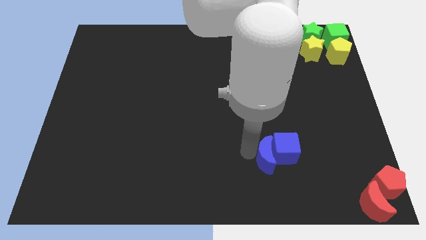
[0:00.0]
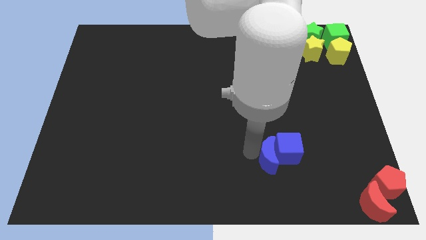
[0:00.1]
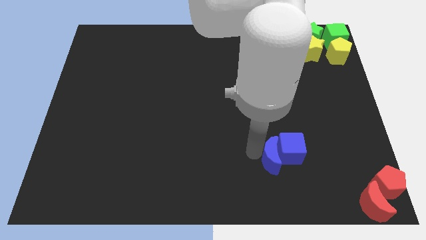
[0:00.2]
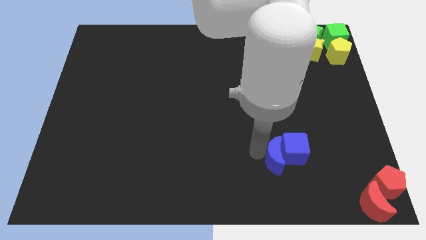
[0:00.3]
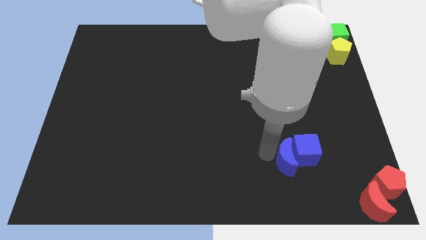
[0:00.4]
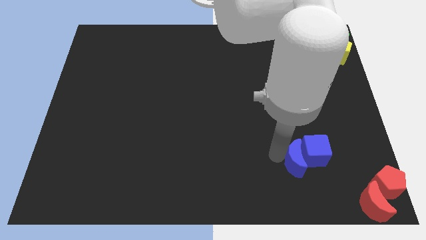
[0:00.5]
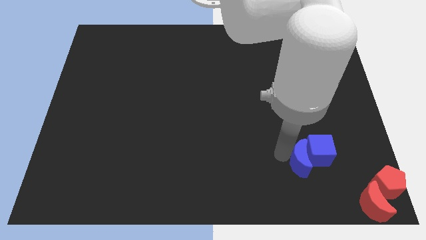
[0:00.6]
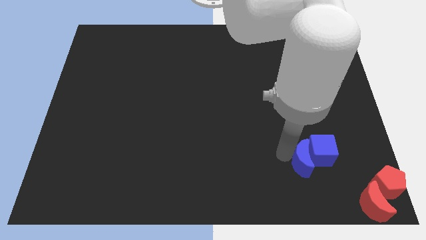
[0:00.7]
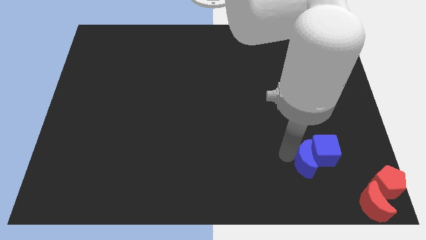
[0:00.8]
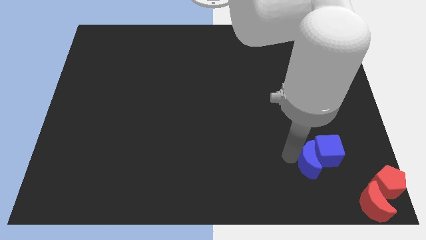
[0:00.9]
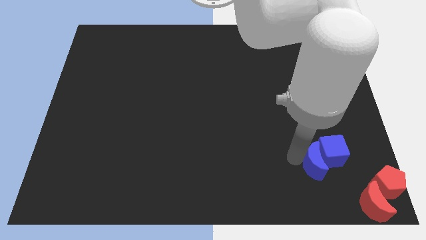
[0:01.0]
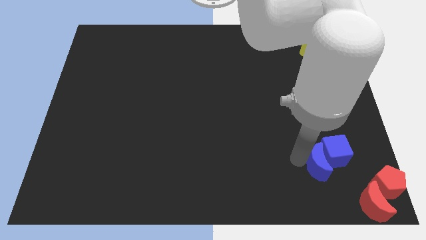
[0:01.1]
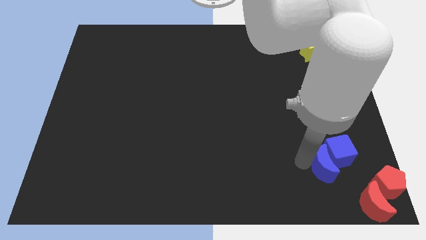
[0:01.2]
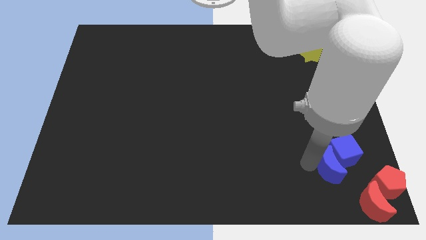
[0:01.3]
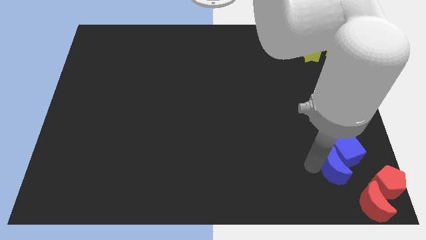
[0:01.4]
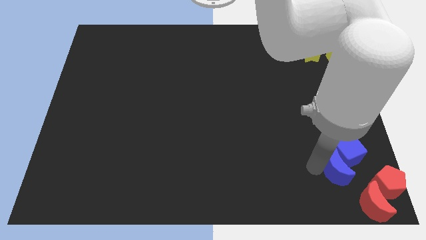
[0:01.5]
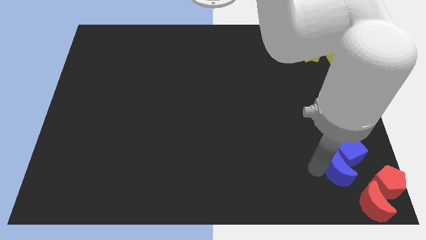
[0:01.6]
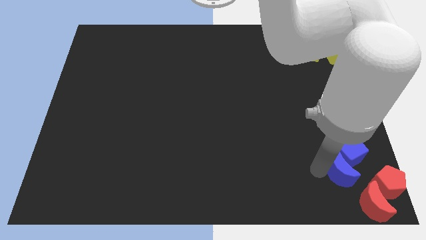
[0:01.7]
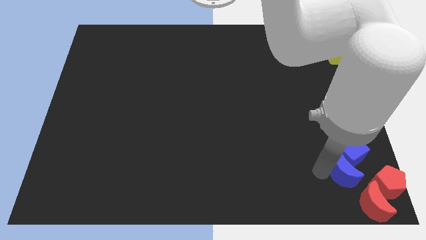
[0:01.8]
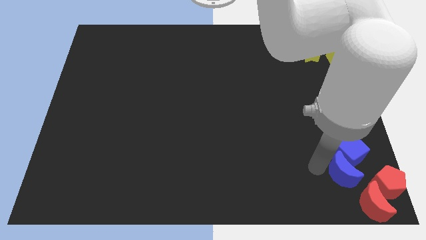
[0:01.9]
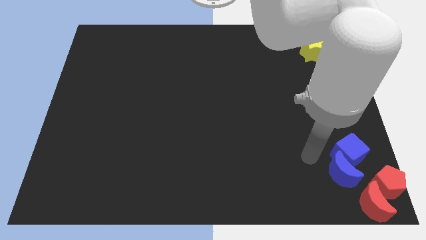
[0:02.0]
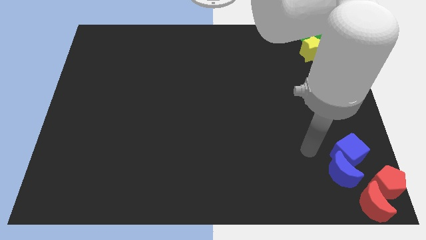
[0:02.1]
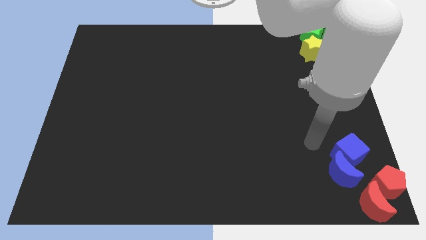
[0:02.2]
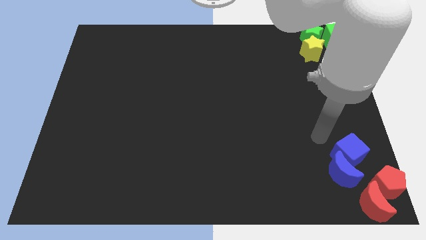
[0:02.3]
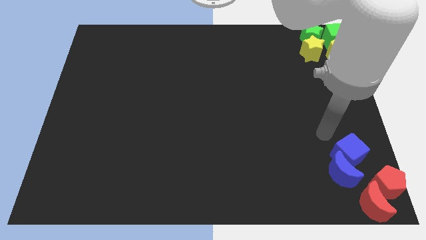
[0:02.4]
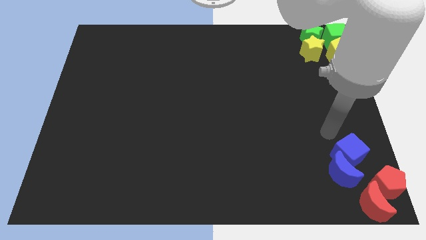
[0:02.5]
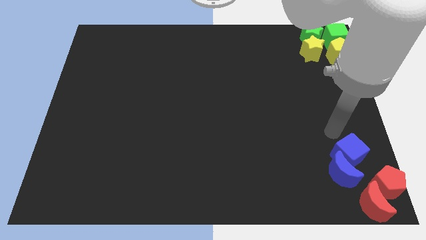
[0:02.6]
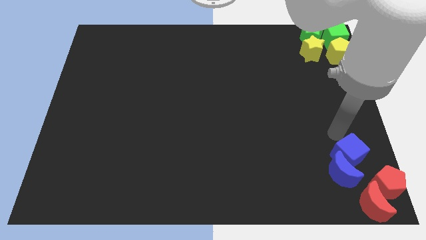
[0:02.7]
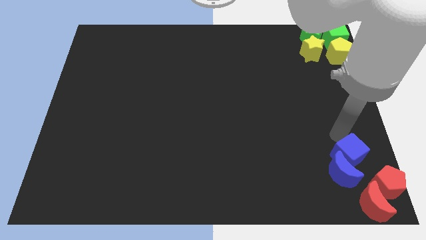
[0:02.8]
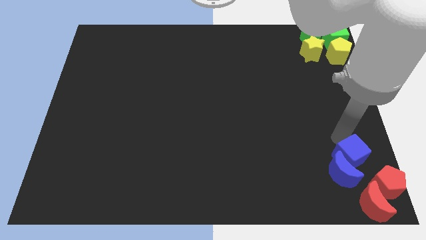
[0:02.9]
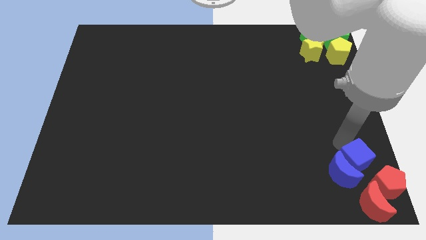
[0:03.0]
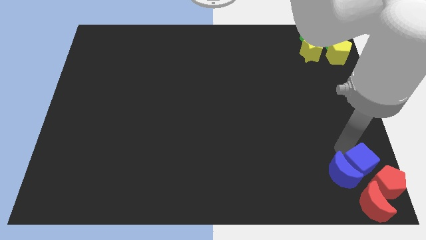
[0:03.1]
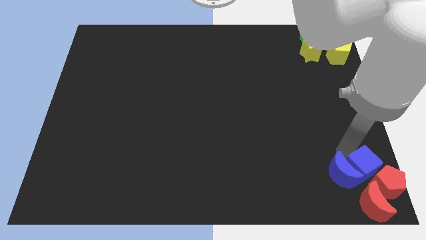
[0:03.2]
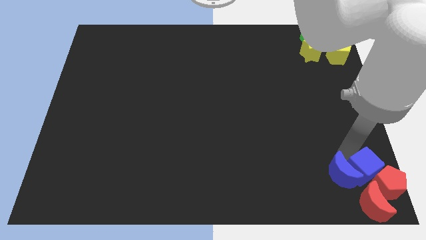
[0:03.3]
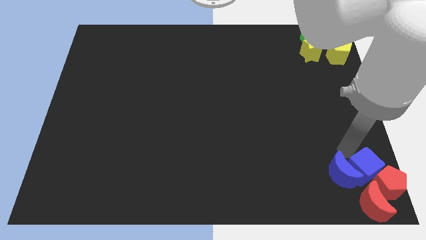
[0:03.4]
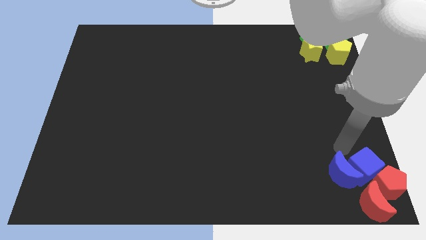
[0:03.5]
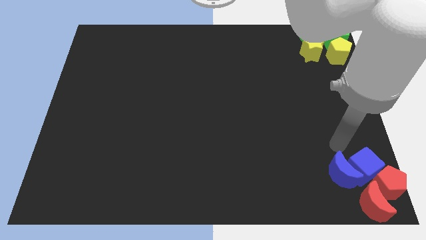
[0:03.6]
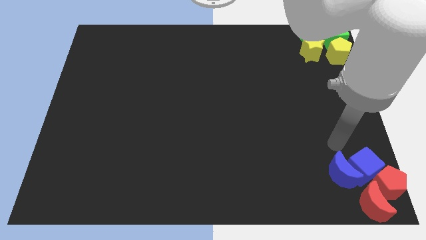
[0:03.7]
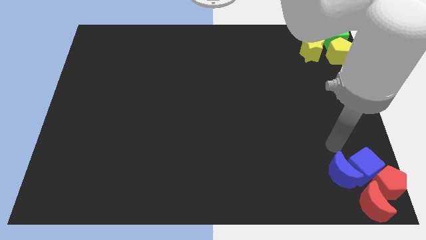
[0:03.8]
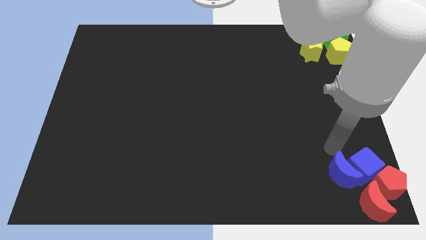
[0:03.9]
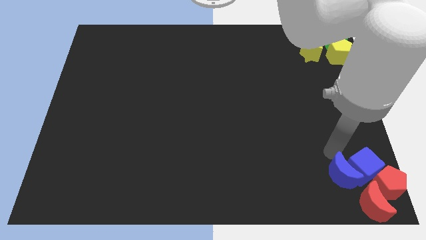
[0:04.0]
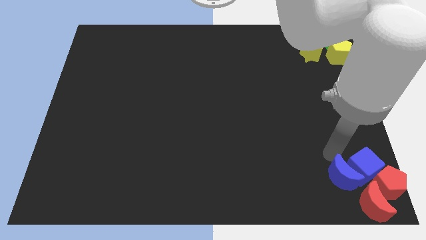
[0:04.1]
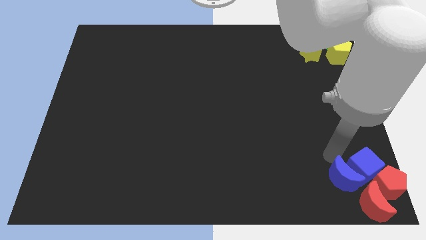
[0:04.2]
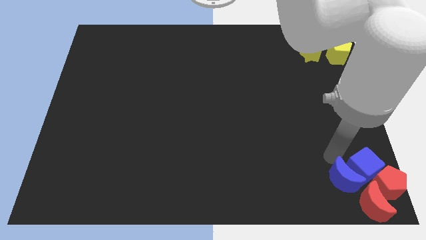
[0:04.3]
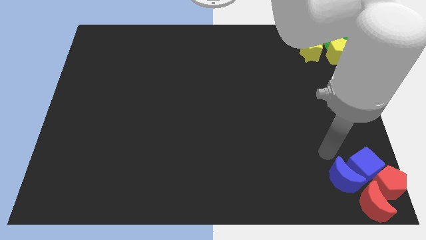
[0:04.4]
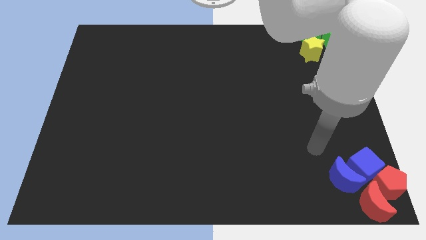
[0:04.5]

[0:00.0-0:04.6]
push the both blue crescent and blue cube to the top of red pentagon

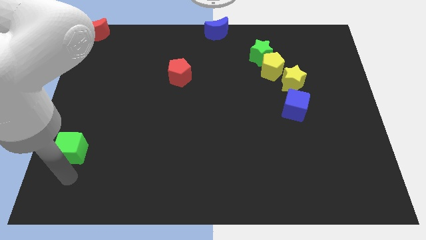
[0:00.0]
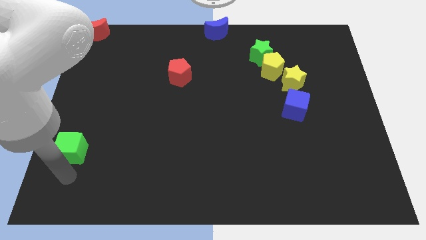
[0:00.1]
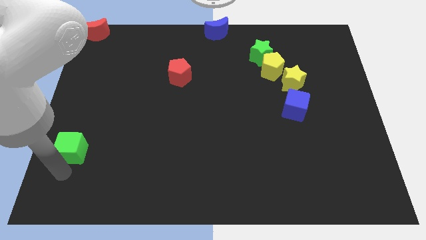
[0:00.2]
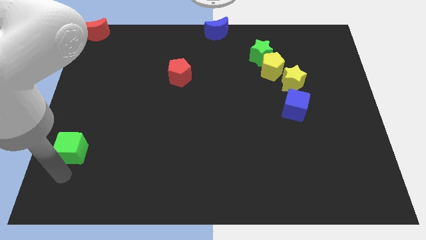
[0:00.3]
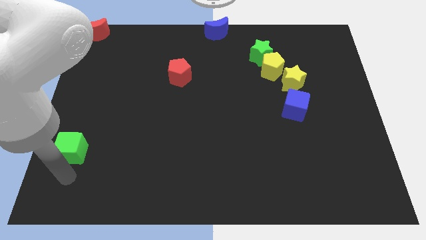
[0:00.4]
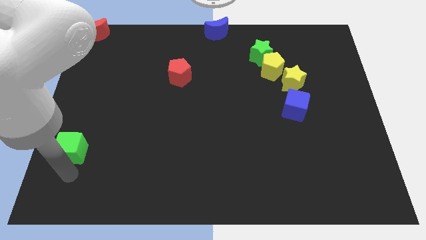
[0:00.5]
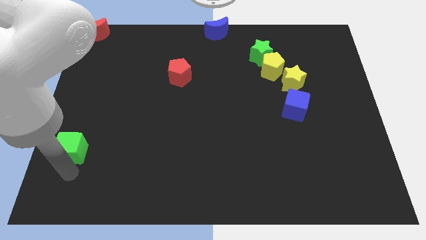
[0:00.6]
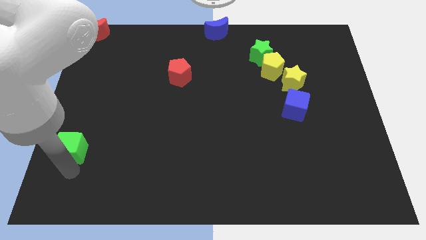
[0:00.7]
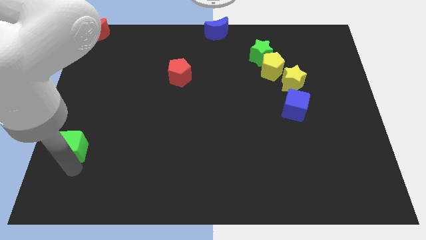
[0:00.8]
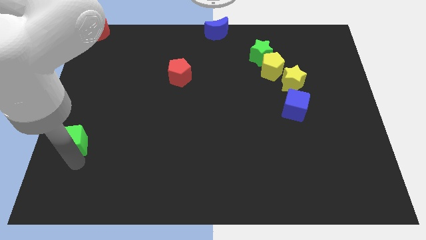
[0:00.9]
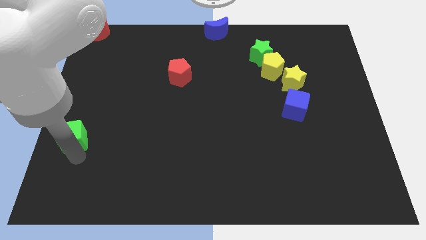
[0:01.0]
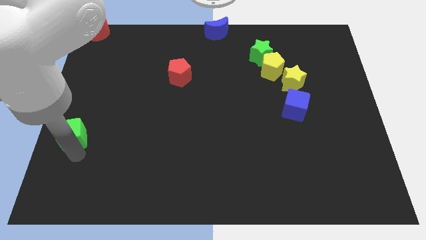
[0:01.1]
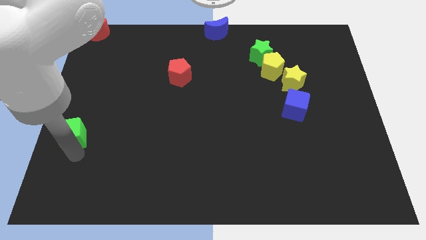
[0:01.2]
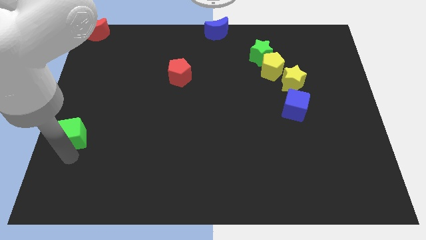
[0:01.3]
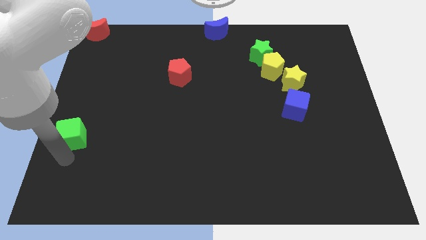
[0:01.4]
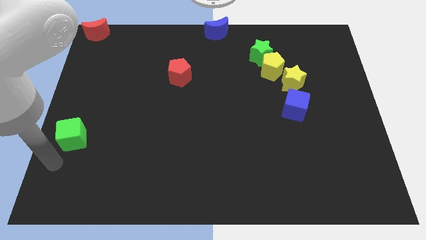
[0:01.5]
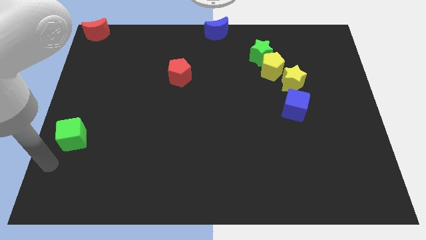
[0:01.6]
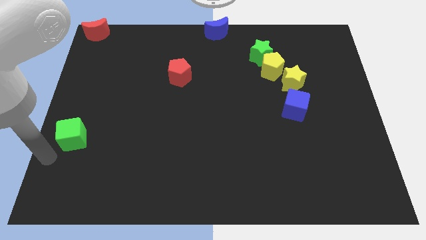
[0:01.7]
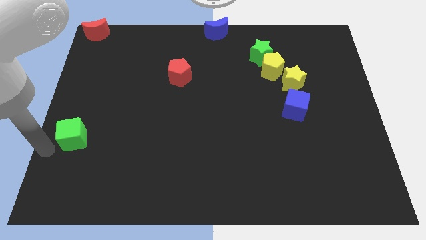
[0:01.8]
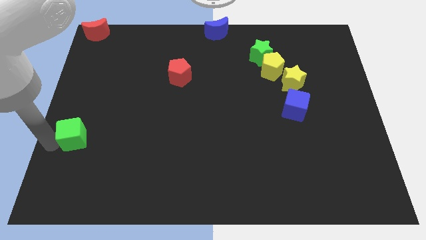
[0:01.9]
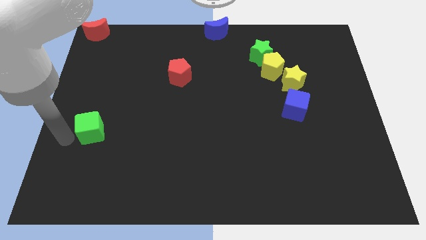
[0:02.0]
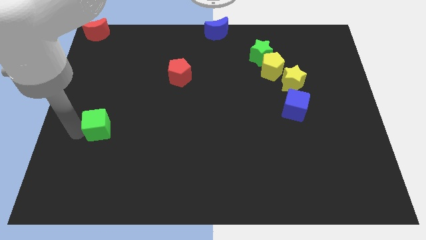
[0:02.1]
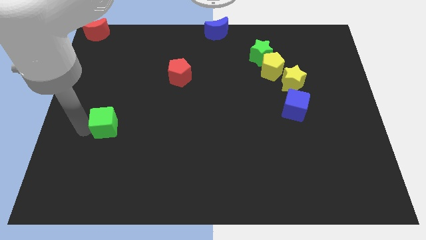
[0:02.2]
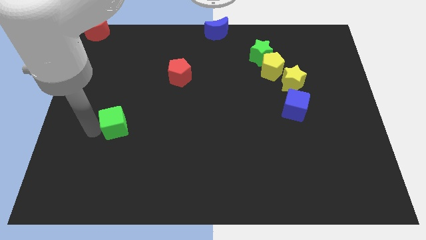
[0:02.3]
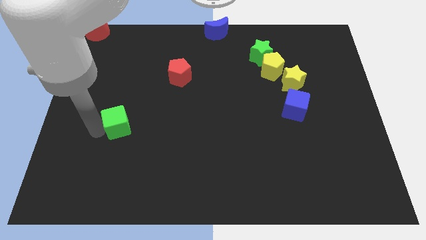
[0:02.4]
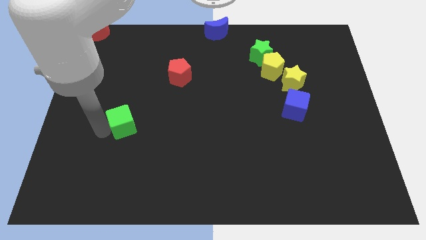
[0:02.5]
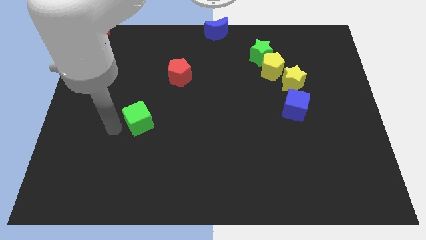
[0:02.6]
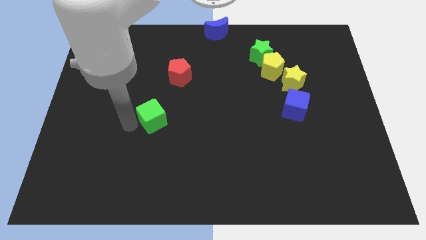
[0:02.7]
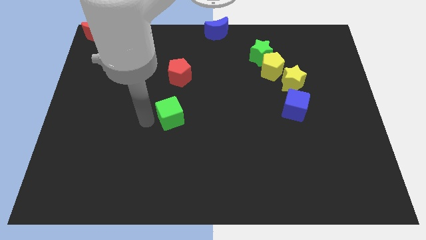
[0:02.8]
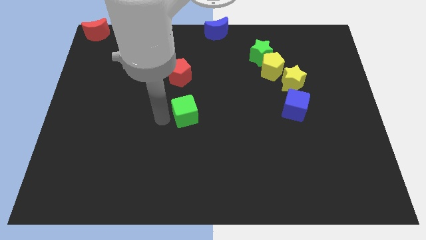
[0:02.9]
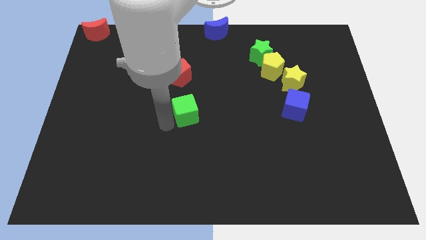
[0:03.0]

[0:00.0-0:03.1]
move the green cube vertically below the red pentagon

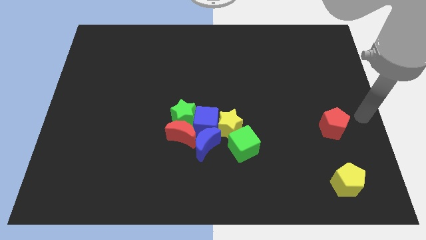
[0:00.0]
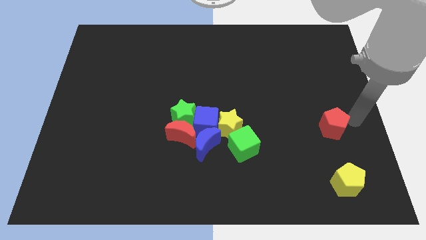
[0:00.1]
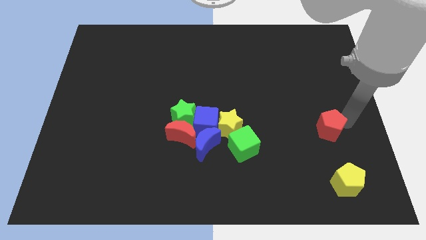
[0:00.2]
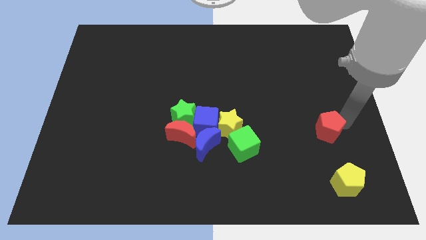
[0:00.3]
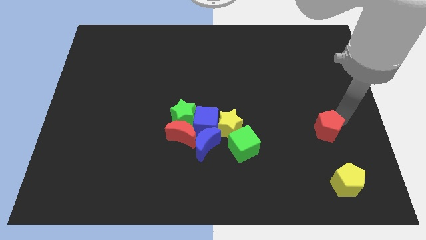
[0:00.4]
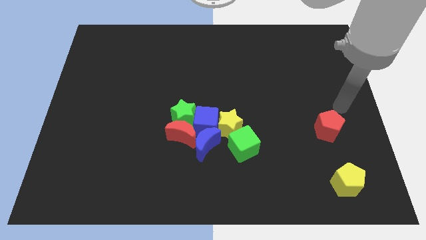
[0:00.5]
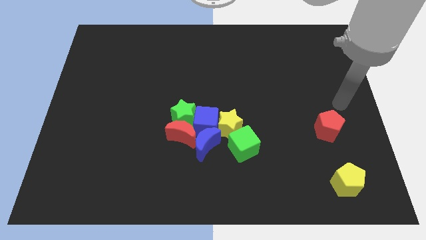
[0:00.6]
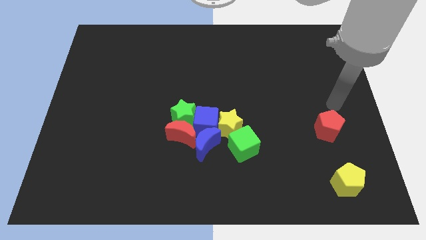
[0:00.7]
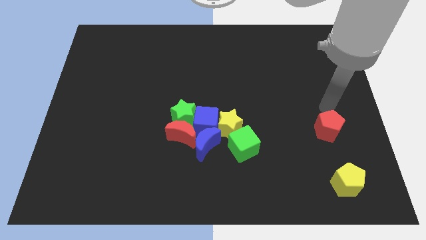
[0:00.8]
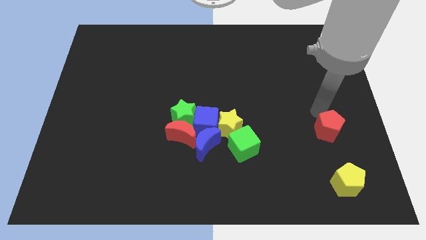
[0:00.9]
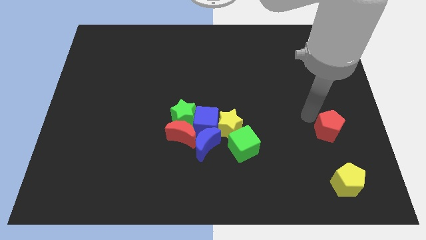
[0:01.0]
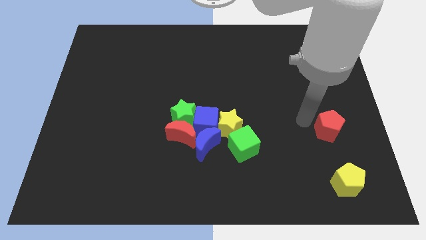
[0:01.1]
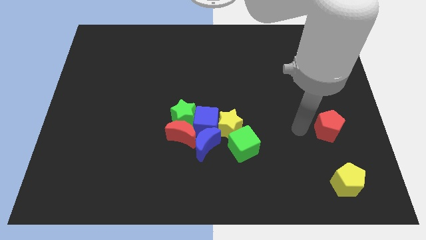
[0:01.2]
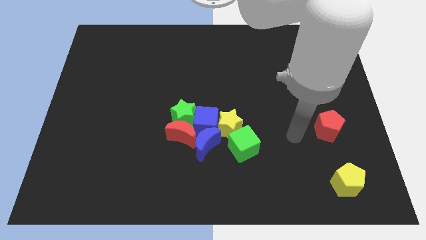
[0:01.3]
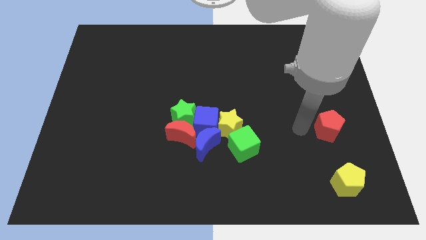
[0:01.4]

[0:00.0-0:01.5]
slightly touch the red pentagon

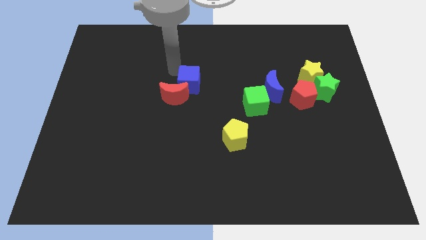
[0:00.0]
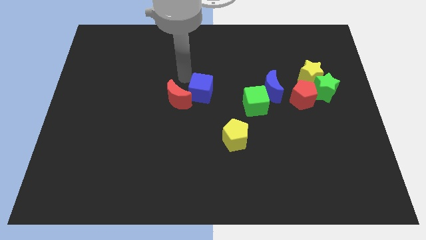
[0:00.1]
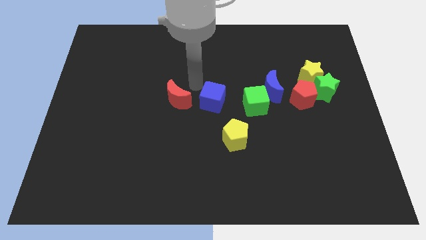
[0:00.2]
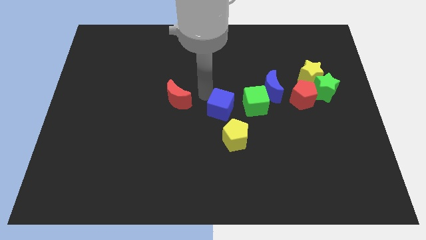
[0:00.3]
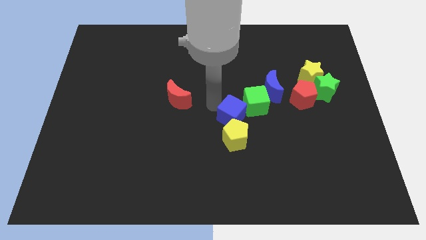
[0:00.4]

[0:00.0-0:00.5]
separate red moon and blue cube
